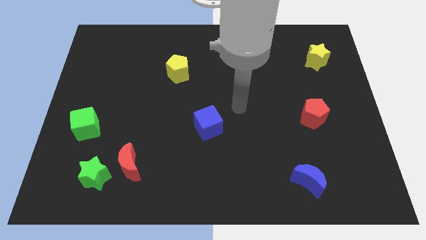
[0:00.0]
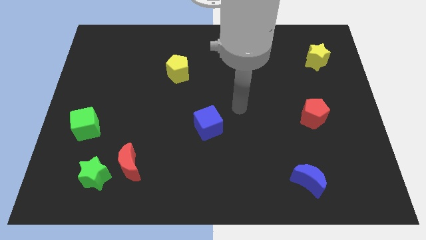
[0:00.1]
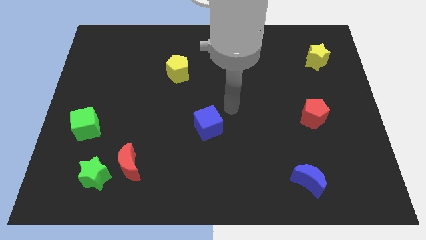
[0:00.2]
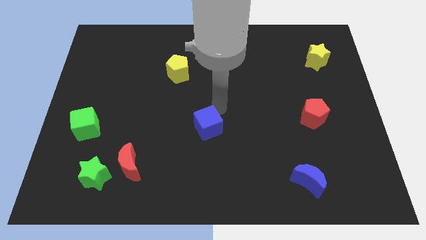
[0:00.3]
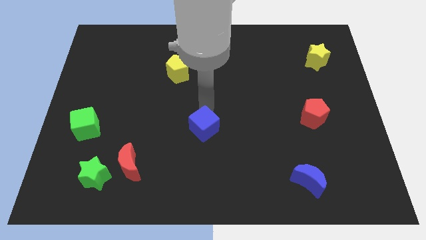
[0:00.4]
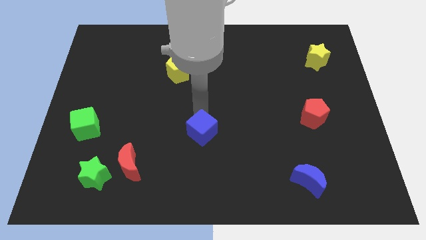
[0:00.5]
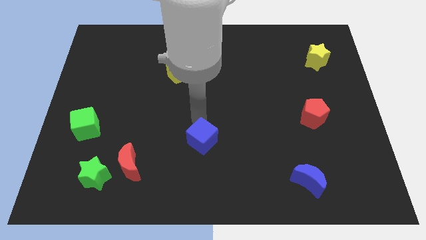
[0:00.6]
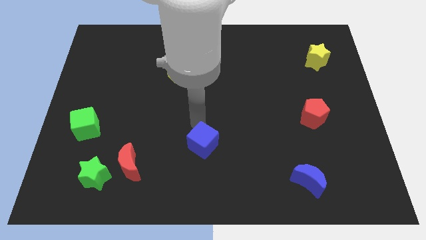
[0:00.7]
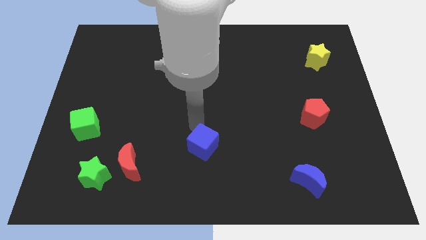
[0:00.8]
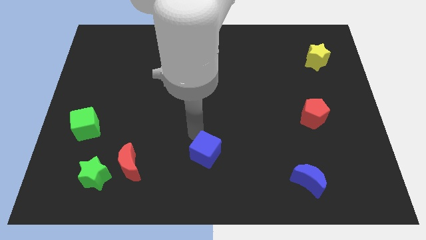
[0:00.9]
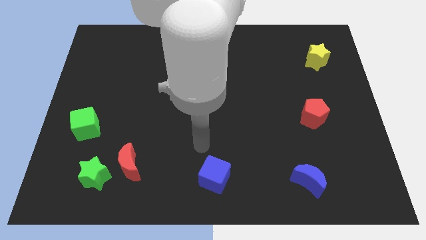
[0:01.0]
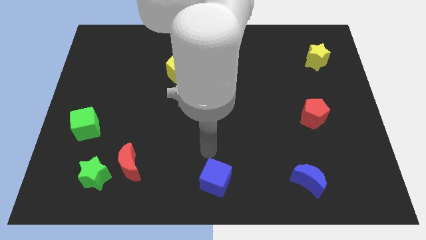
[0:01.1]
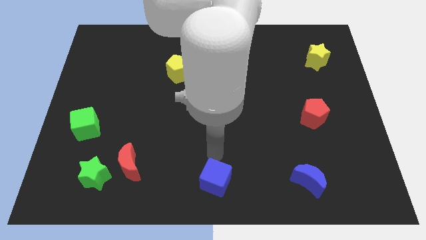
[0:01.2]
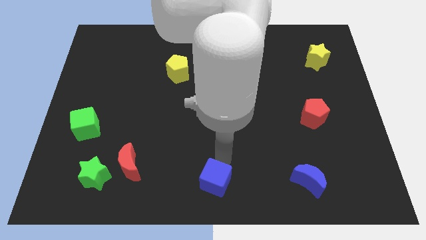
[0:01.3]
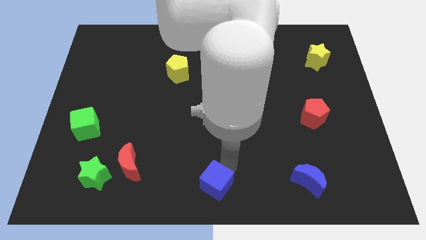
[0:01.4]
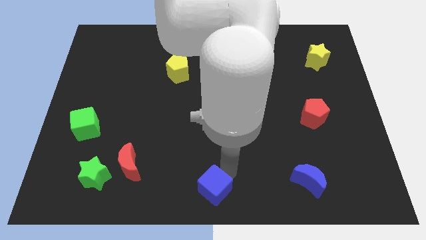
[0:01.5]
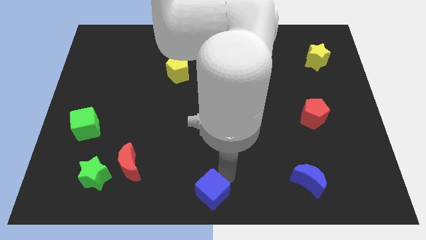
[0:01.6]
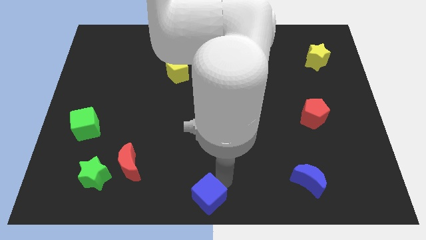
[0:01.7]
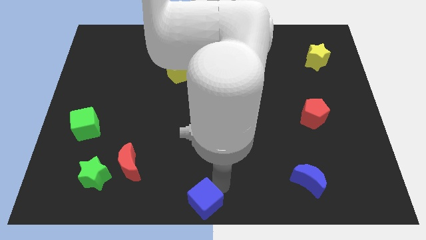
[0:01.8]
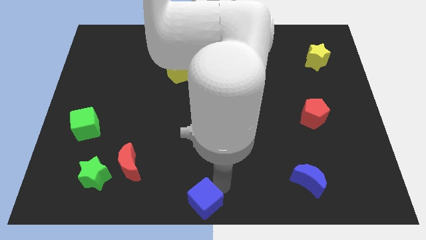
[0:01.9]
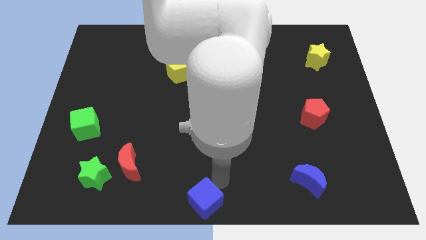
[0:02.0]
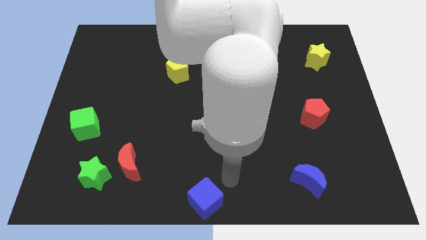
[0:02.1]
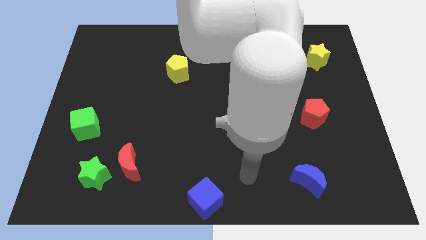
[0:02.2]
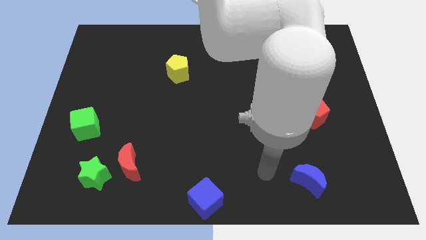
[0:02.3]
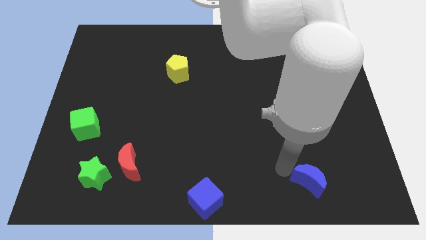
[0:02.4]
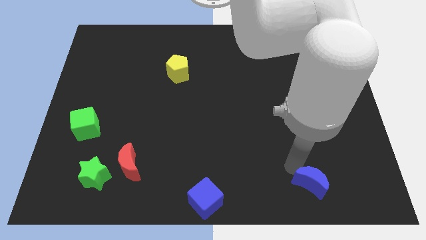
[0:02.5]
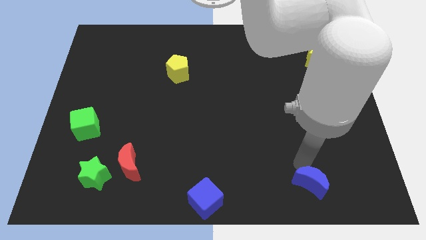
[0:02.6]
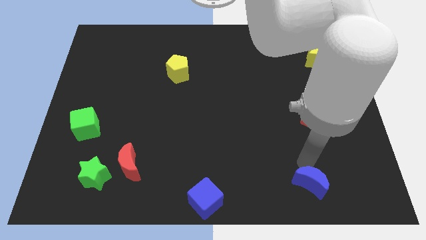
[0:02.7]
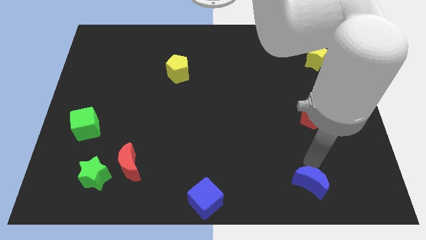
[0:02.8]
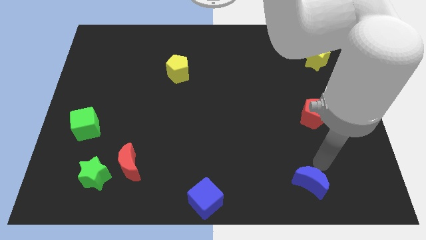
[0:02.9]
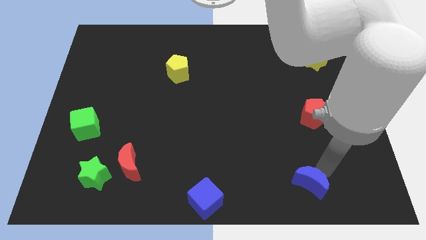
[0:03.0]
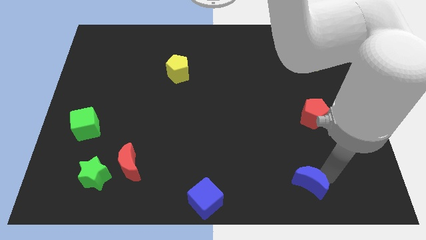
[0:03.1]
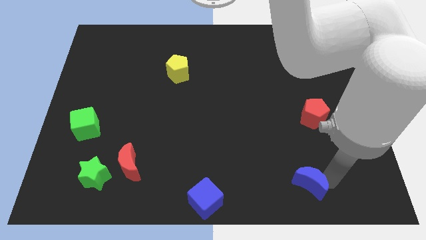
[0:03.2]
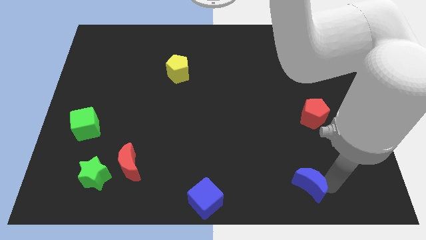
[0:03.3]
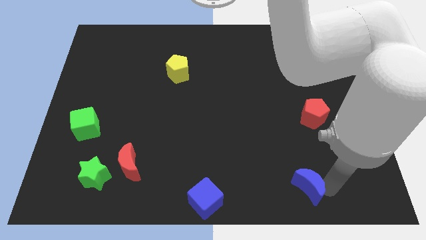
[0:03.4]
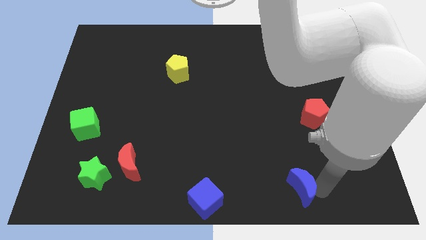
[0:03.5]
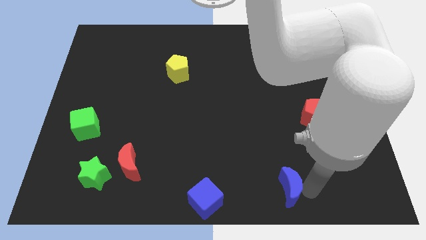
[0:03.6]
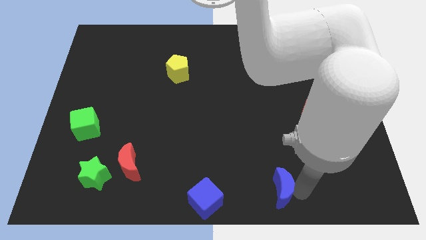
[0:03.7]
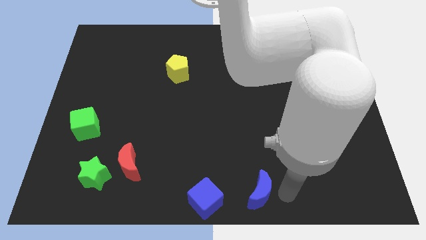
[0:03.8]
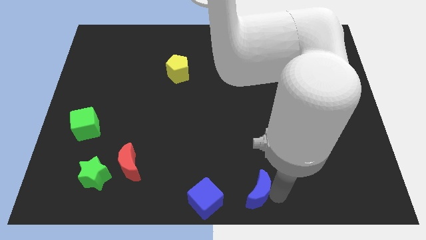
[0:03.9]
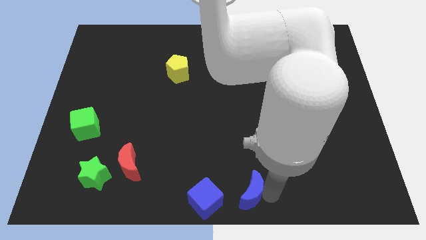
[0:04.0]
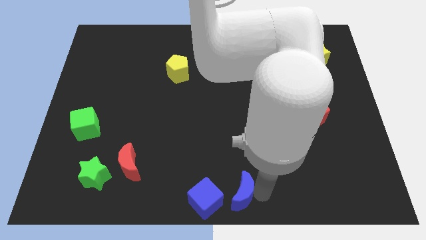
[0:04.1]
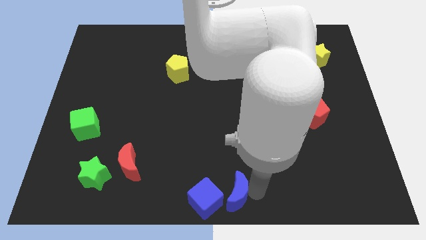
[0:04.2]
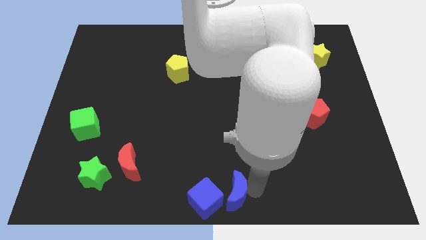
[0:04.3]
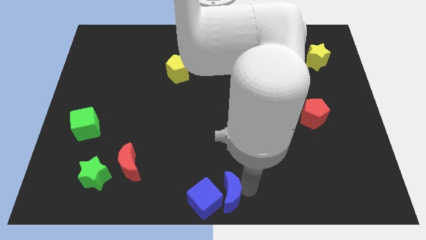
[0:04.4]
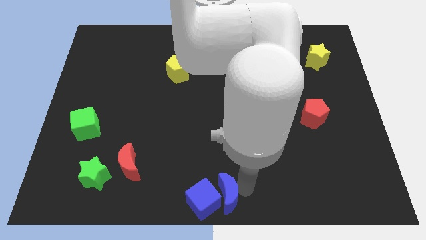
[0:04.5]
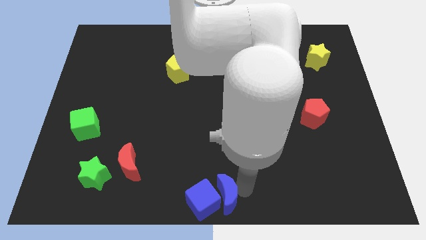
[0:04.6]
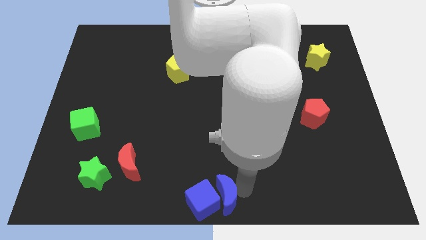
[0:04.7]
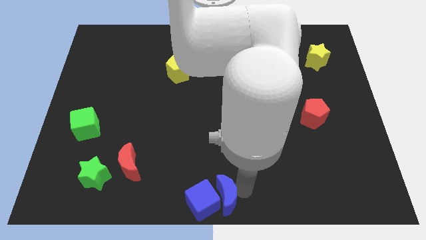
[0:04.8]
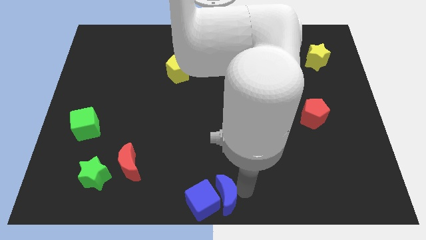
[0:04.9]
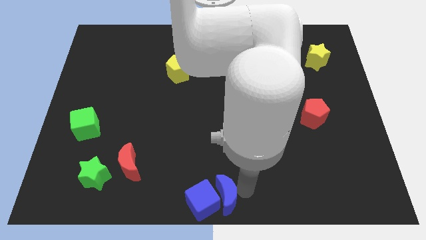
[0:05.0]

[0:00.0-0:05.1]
slide blue blocks to the bottom center

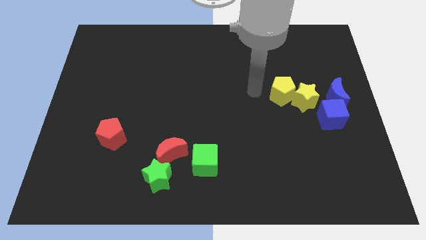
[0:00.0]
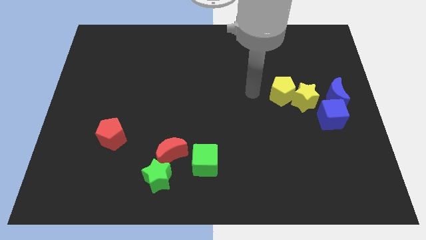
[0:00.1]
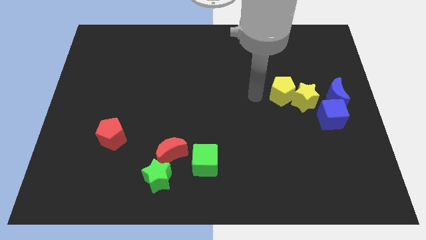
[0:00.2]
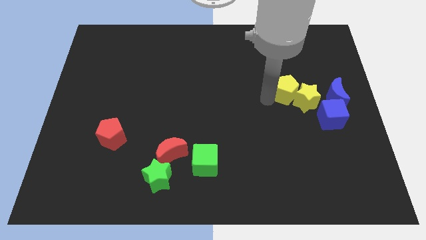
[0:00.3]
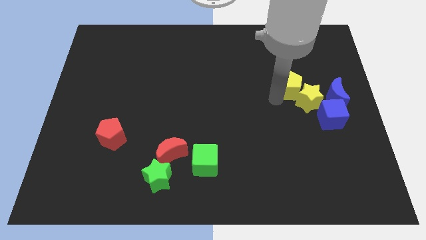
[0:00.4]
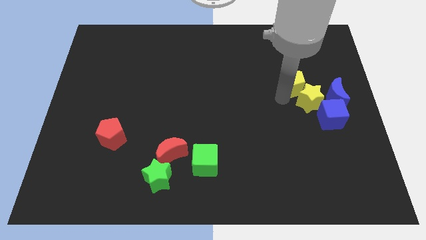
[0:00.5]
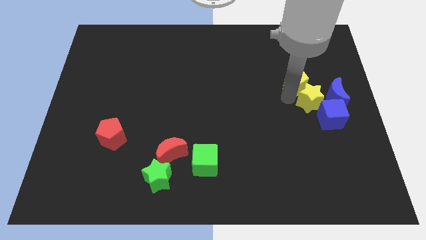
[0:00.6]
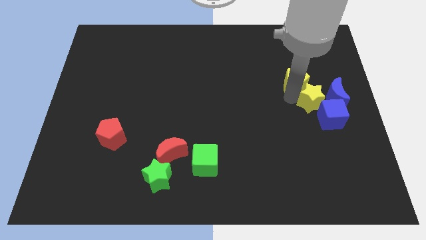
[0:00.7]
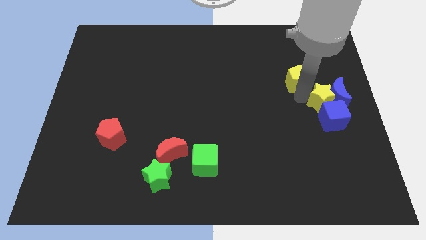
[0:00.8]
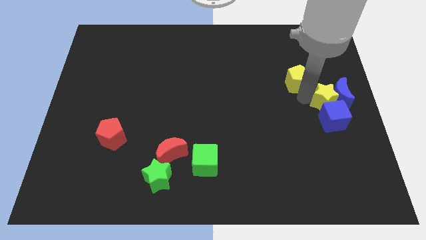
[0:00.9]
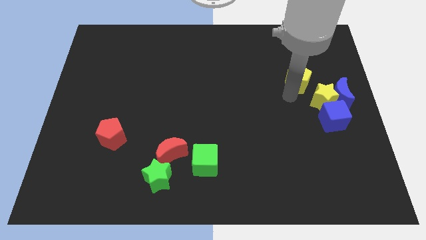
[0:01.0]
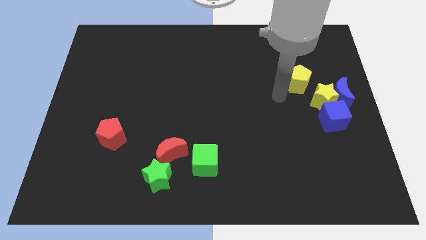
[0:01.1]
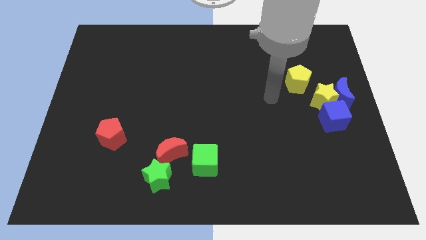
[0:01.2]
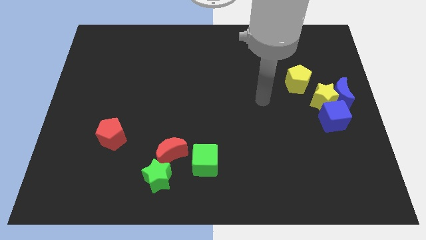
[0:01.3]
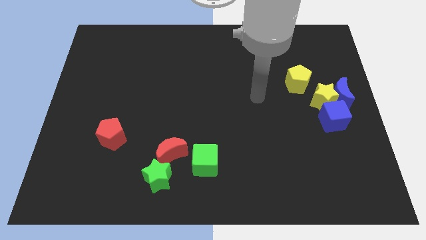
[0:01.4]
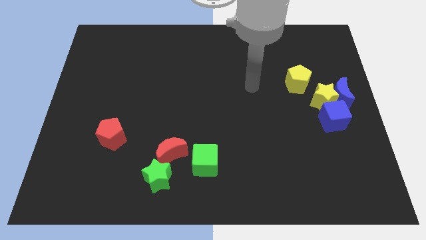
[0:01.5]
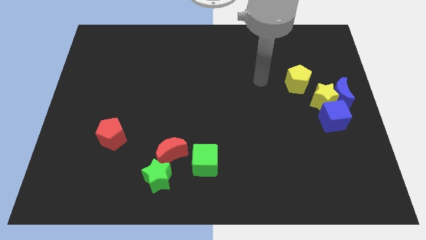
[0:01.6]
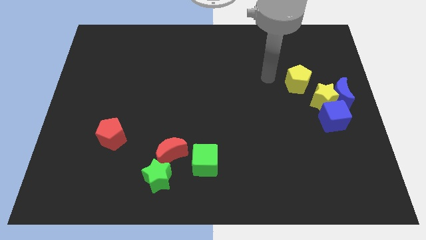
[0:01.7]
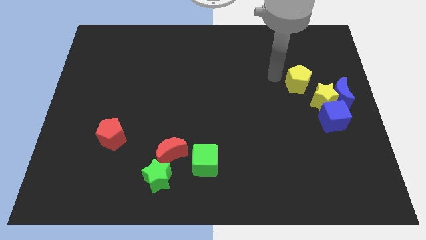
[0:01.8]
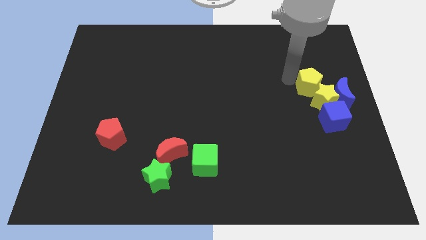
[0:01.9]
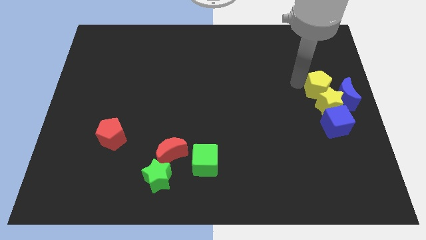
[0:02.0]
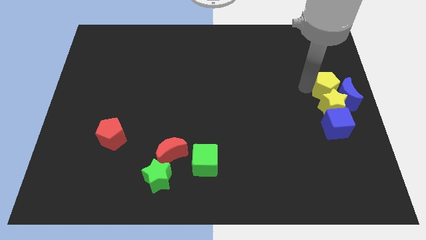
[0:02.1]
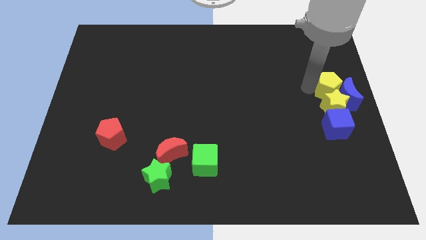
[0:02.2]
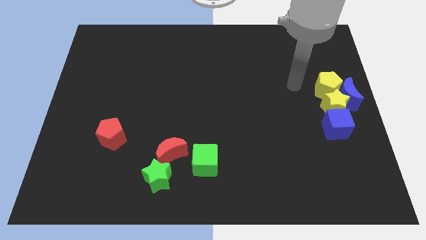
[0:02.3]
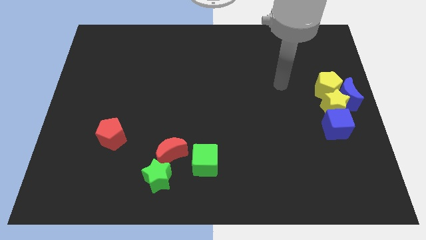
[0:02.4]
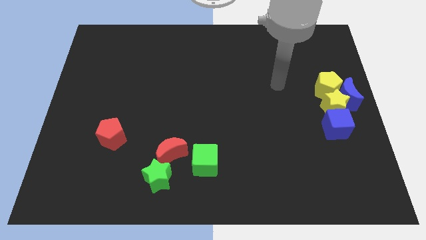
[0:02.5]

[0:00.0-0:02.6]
push the yellow blocks into the blue crescent

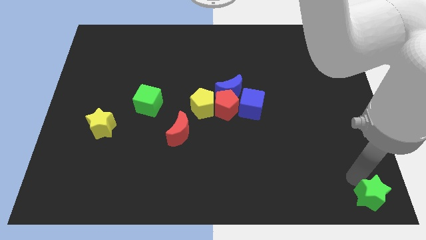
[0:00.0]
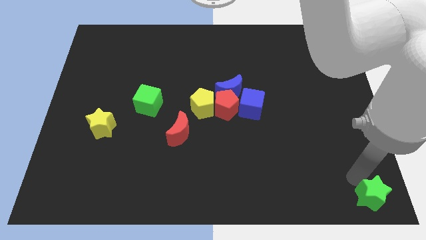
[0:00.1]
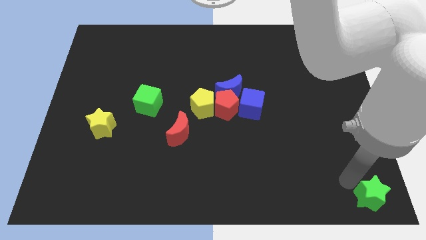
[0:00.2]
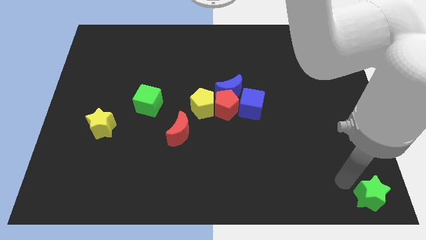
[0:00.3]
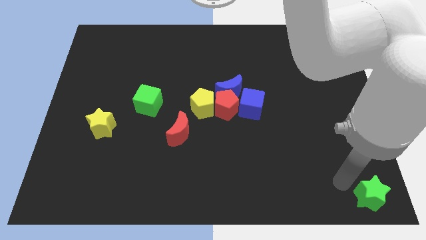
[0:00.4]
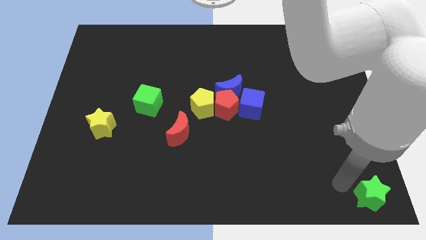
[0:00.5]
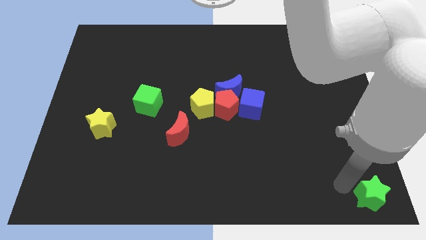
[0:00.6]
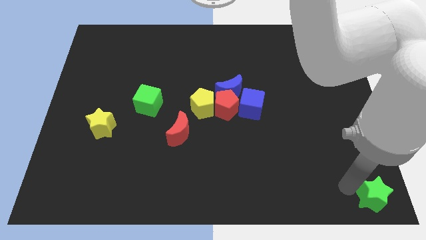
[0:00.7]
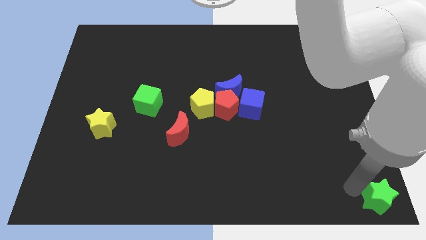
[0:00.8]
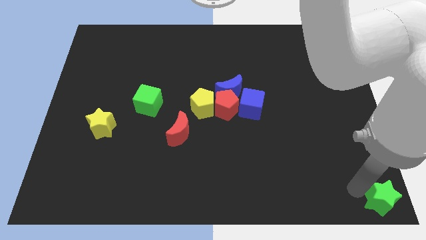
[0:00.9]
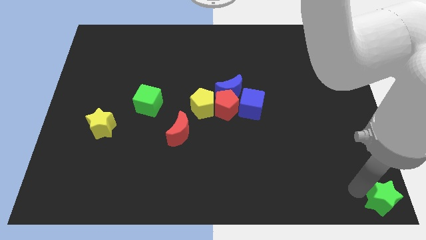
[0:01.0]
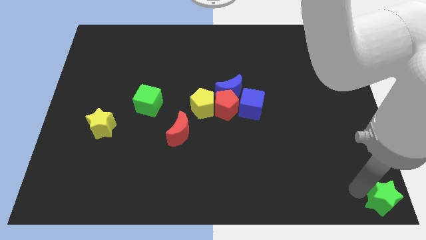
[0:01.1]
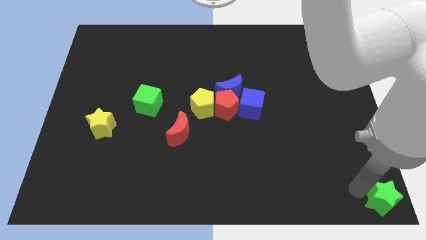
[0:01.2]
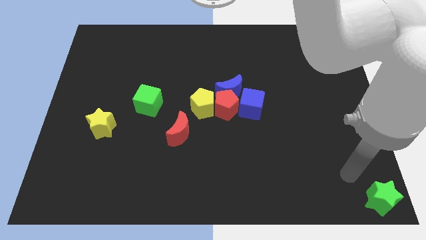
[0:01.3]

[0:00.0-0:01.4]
move green star to the bottom right corner of the board
